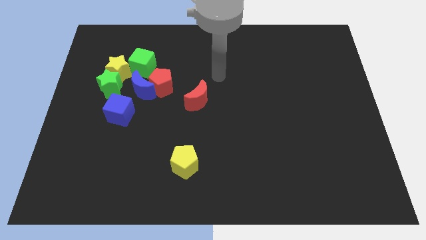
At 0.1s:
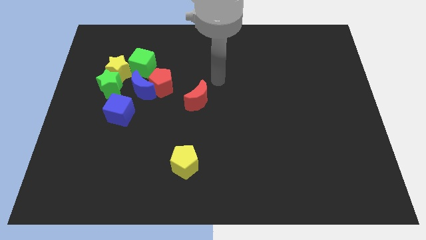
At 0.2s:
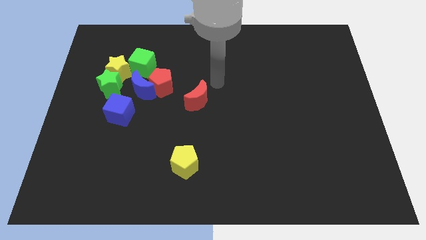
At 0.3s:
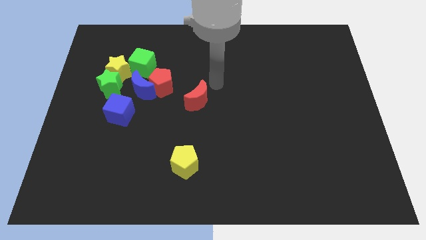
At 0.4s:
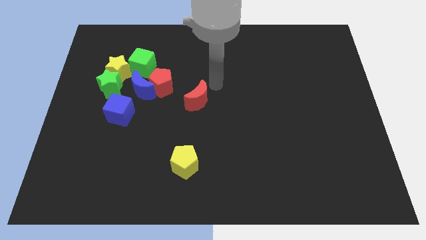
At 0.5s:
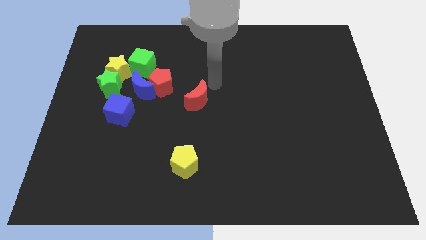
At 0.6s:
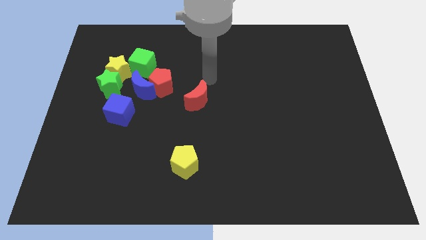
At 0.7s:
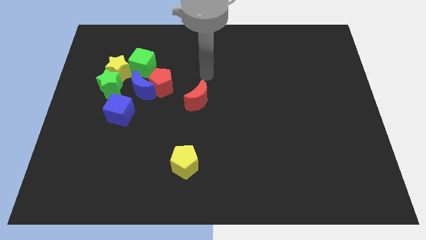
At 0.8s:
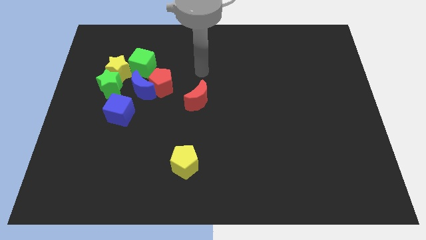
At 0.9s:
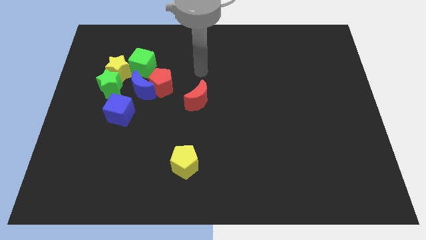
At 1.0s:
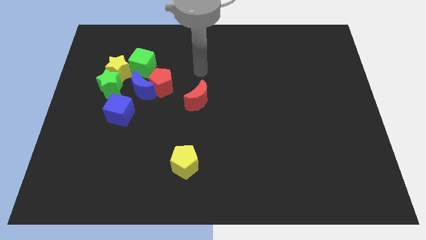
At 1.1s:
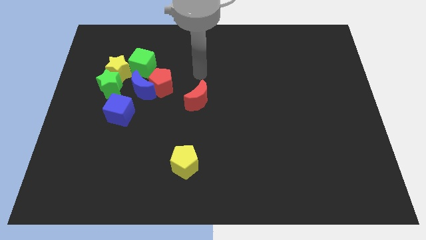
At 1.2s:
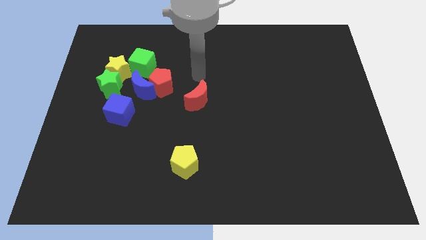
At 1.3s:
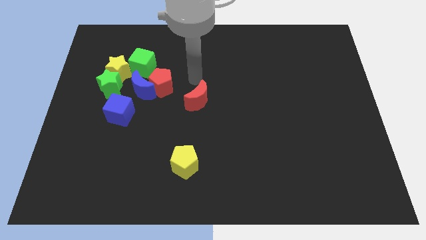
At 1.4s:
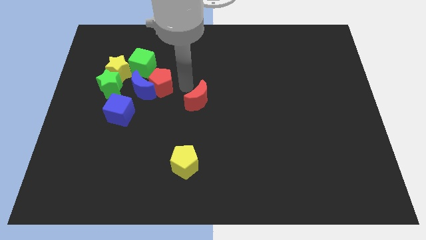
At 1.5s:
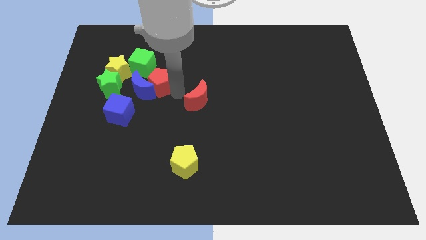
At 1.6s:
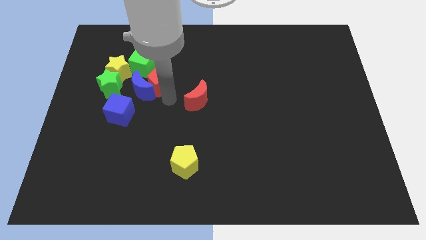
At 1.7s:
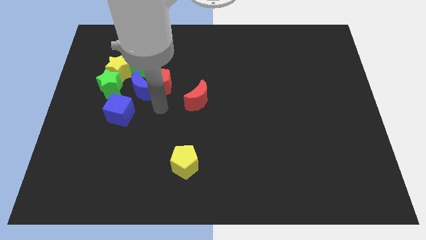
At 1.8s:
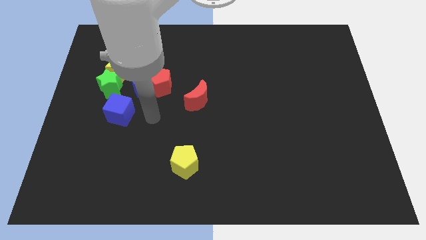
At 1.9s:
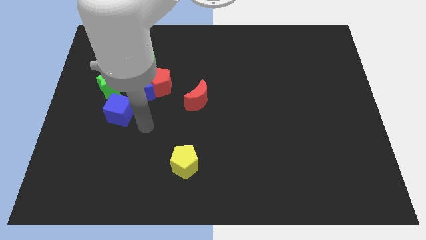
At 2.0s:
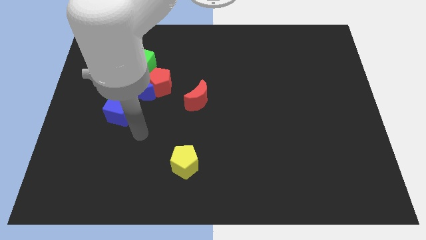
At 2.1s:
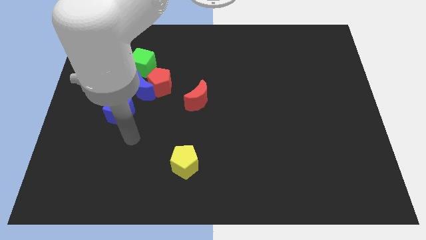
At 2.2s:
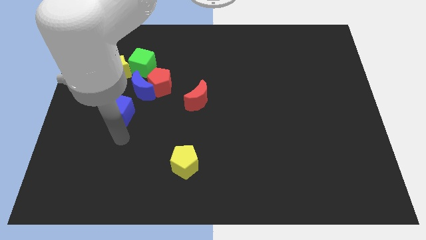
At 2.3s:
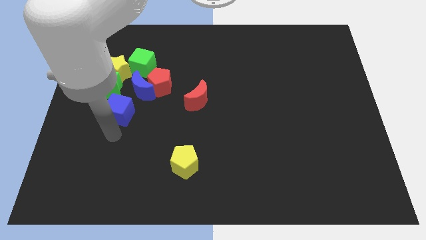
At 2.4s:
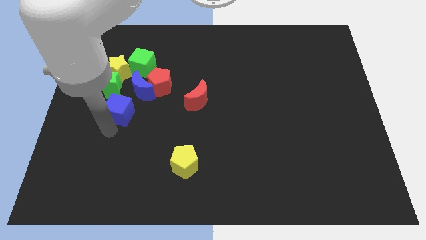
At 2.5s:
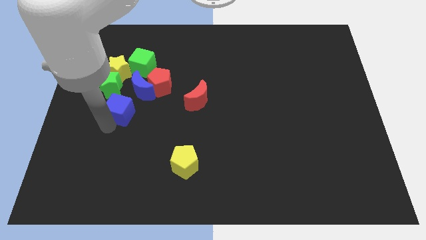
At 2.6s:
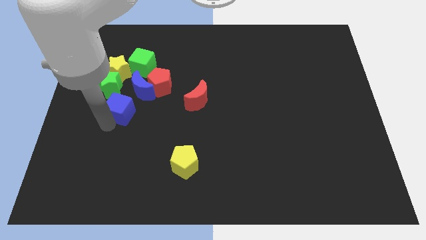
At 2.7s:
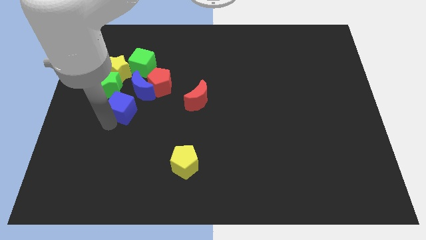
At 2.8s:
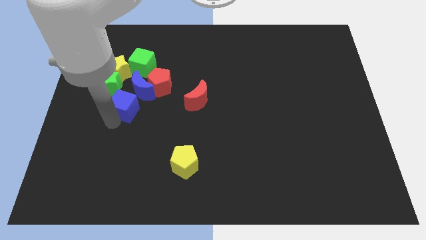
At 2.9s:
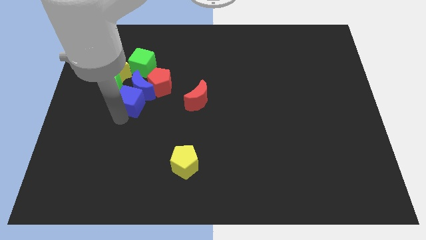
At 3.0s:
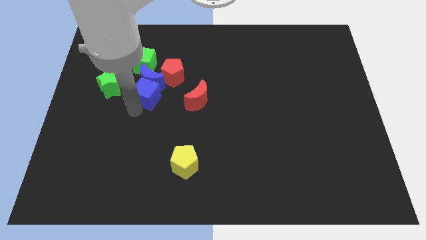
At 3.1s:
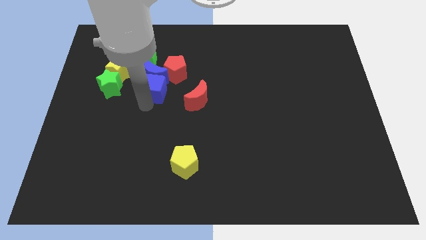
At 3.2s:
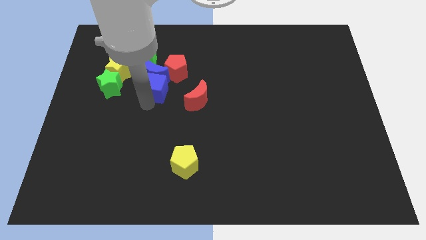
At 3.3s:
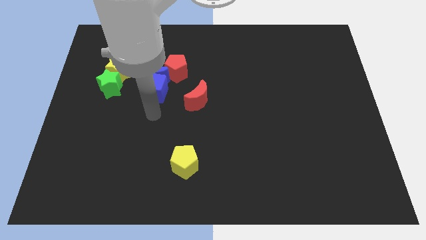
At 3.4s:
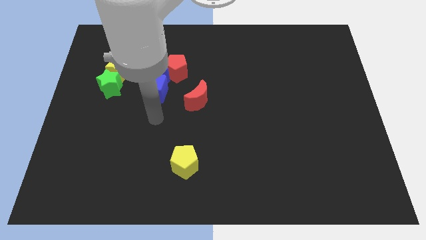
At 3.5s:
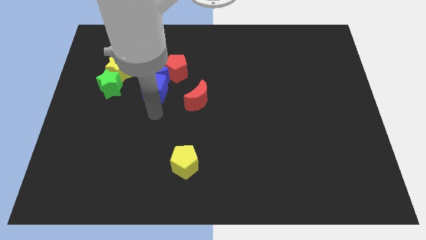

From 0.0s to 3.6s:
push the blue cube into the blue moon

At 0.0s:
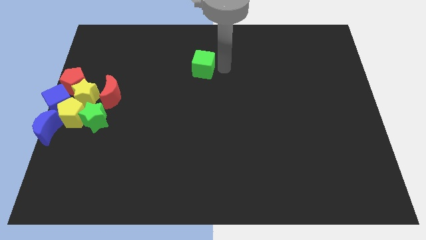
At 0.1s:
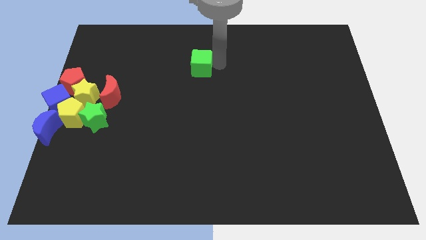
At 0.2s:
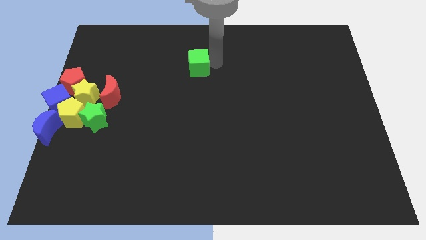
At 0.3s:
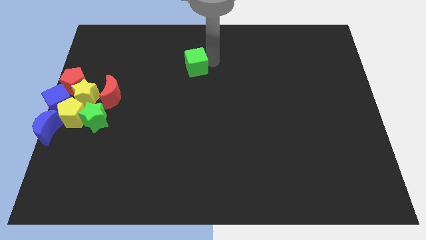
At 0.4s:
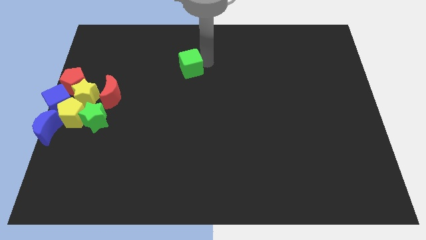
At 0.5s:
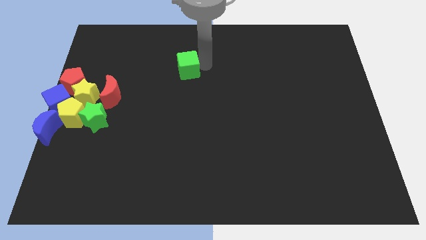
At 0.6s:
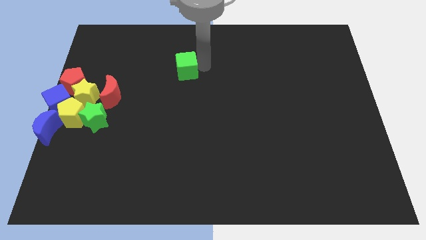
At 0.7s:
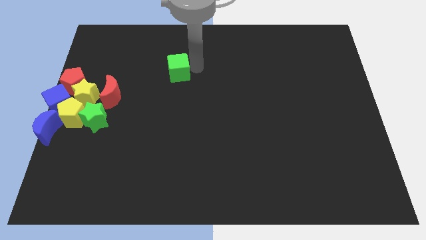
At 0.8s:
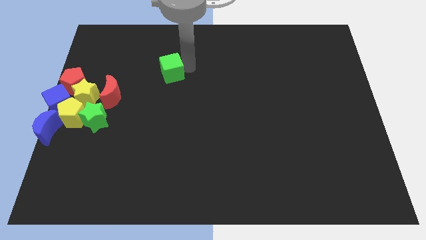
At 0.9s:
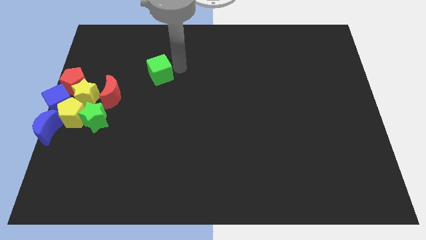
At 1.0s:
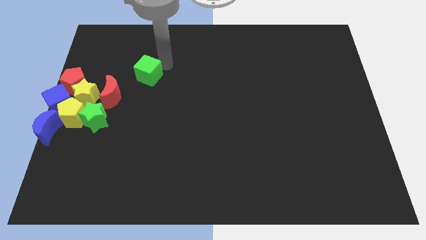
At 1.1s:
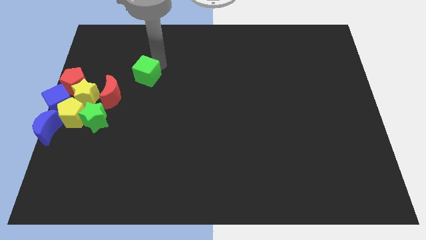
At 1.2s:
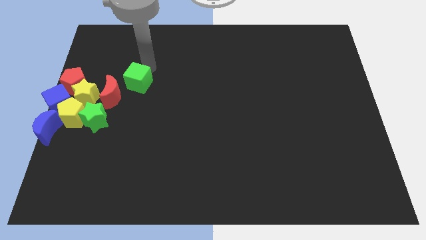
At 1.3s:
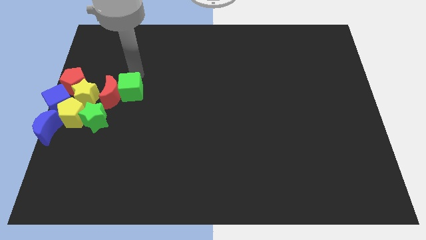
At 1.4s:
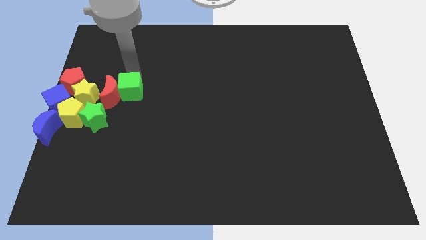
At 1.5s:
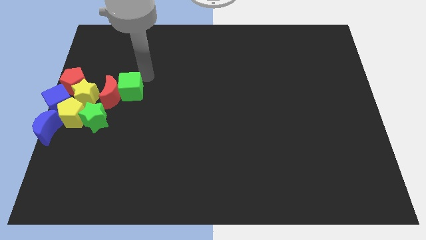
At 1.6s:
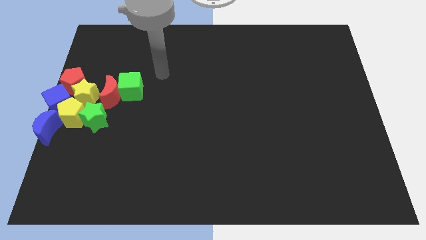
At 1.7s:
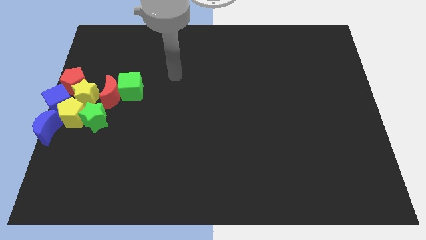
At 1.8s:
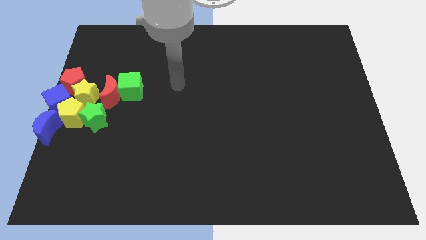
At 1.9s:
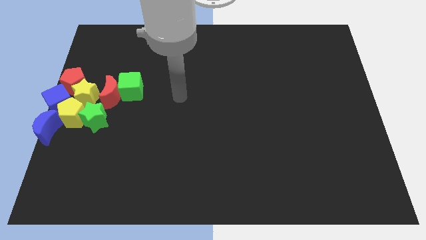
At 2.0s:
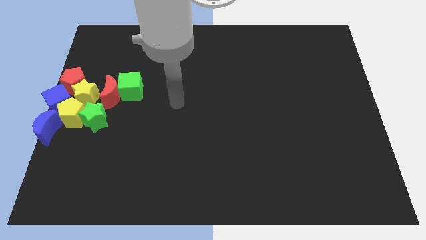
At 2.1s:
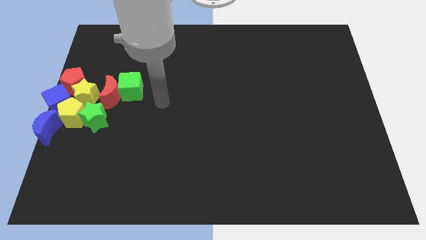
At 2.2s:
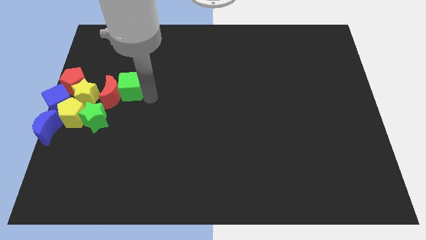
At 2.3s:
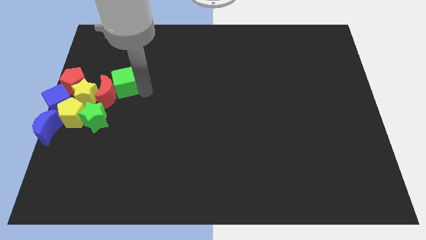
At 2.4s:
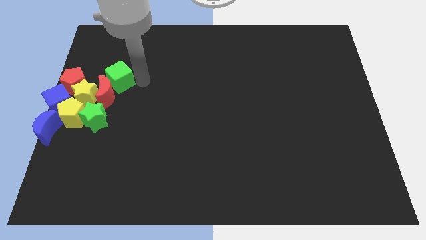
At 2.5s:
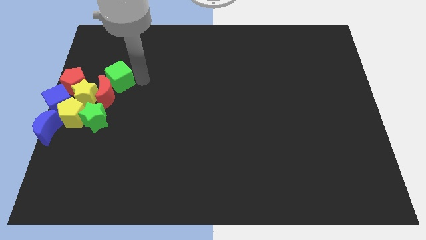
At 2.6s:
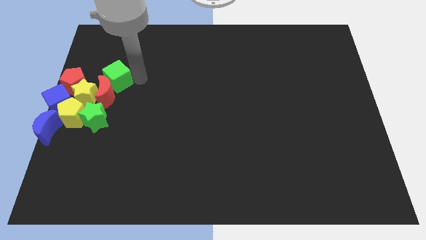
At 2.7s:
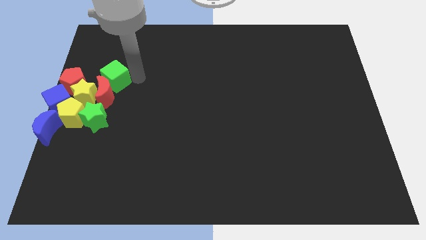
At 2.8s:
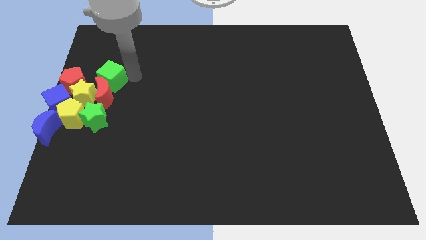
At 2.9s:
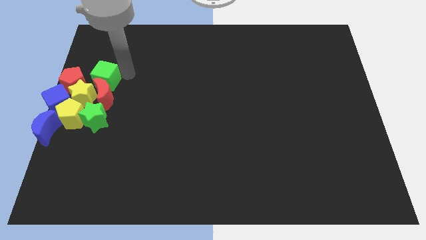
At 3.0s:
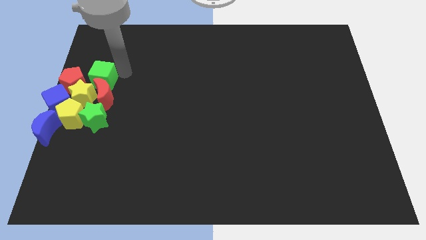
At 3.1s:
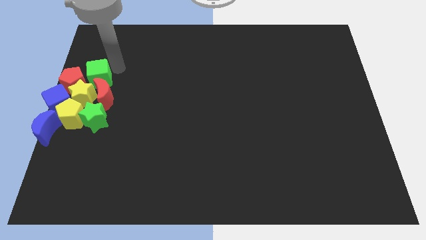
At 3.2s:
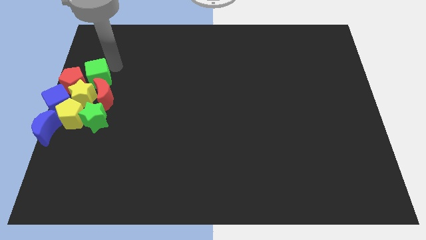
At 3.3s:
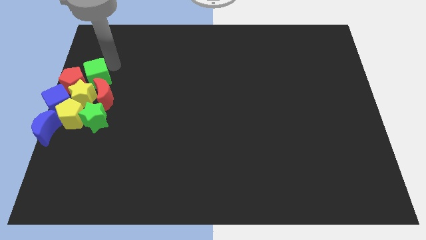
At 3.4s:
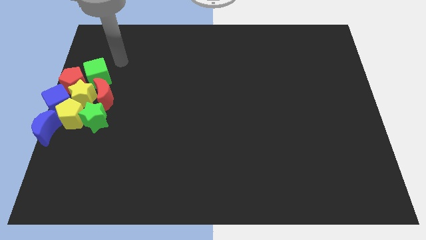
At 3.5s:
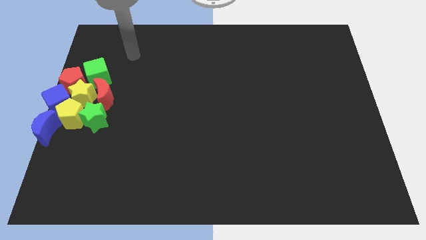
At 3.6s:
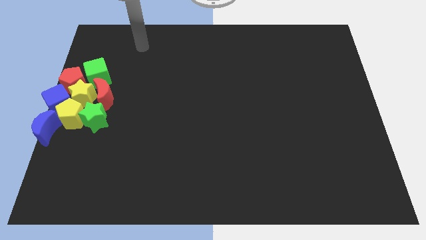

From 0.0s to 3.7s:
push the green cube into the group of blocks

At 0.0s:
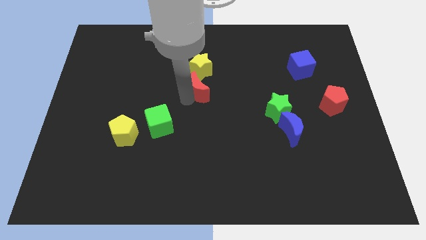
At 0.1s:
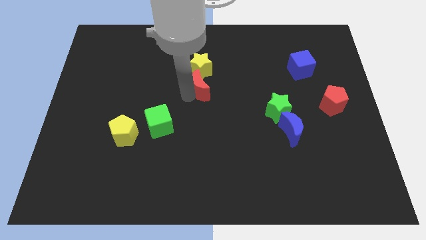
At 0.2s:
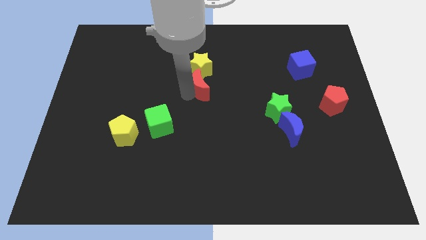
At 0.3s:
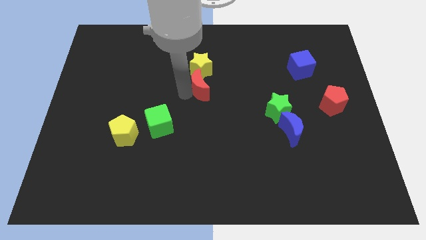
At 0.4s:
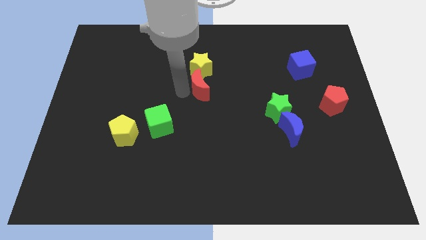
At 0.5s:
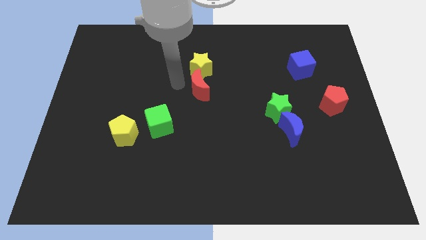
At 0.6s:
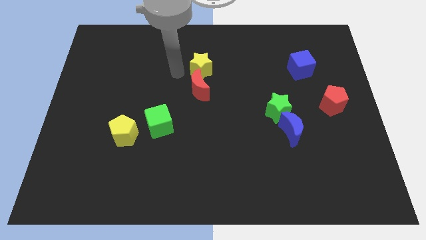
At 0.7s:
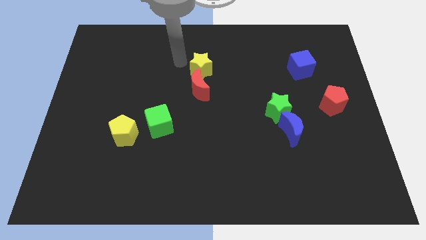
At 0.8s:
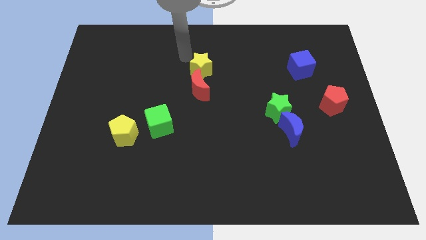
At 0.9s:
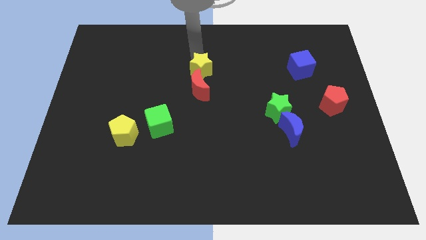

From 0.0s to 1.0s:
place the arm above the yellow star

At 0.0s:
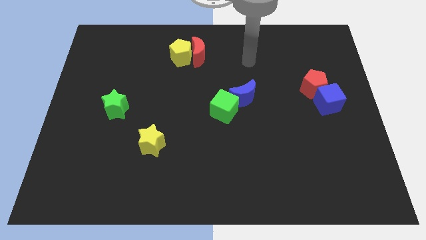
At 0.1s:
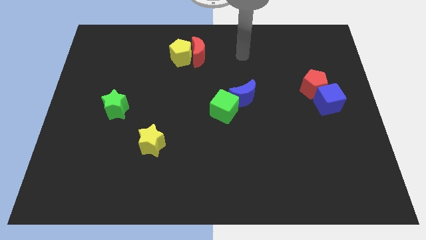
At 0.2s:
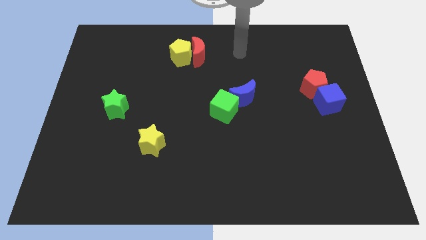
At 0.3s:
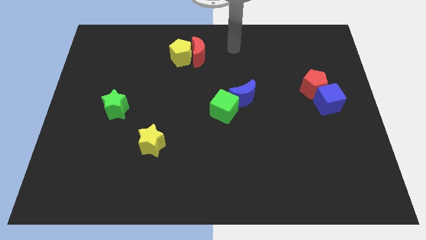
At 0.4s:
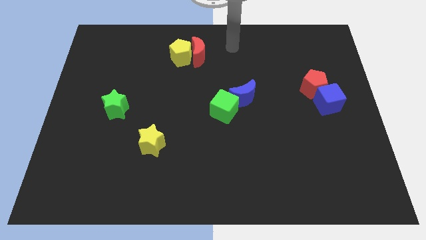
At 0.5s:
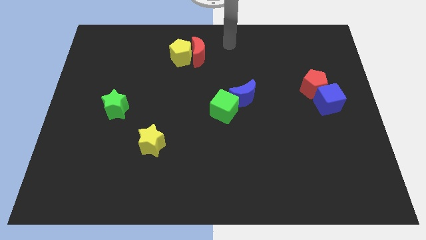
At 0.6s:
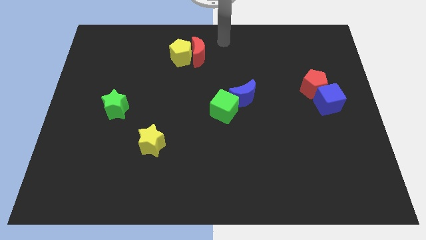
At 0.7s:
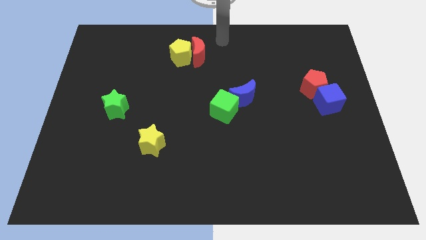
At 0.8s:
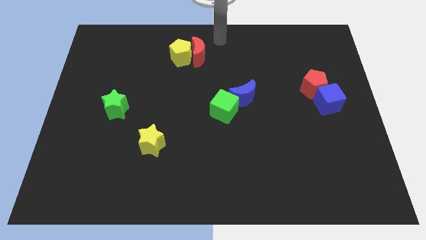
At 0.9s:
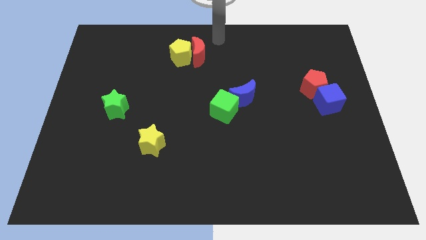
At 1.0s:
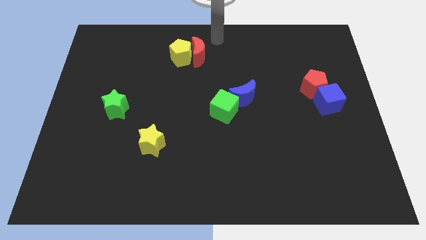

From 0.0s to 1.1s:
move your arm to the top center
